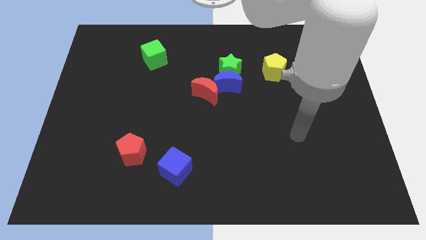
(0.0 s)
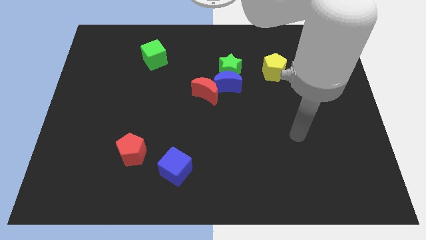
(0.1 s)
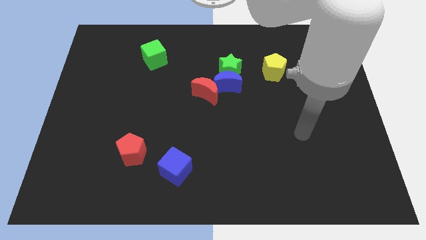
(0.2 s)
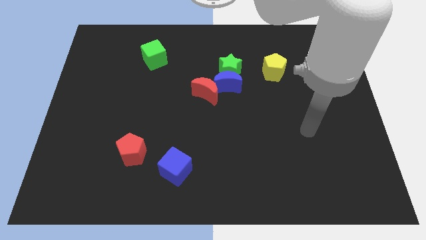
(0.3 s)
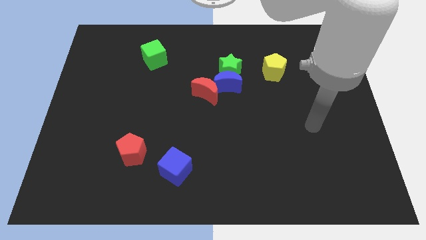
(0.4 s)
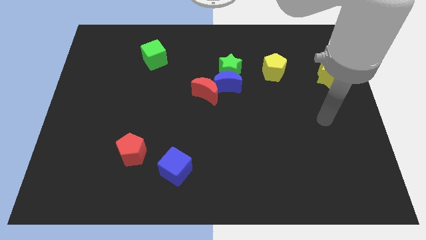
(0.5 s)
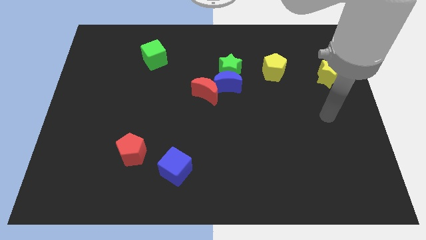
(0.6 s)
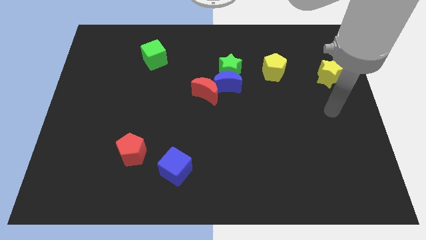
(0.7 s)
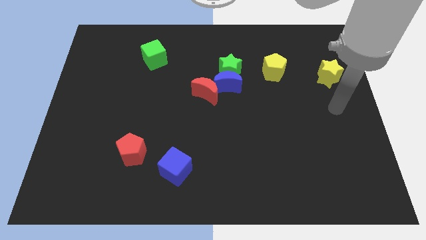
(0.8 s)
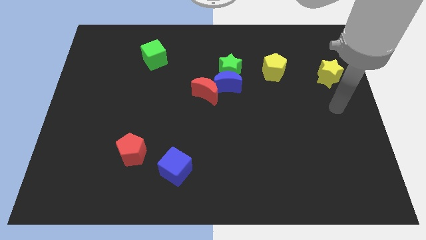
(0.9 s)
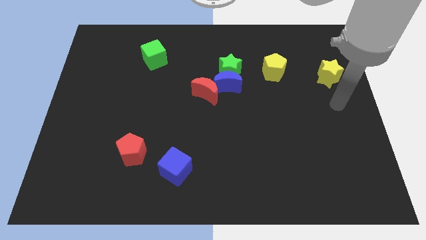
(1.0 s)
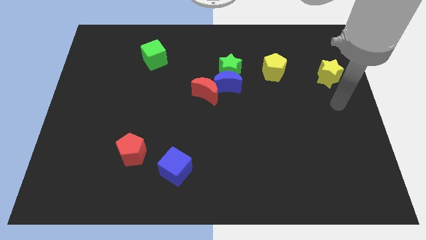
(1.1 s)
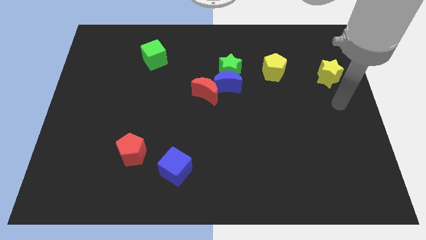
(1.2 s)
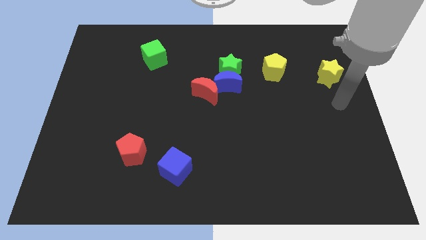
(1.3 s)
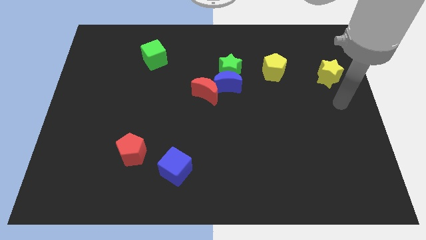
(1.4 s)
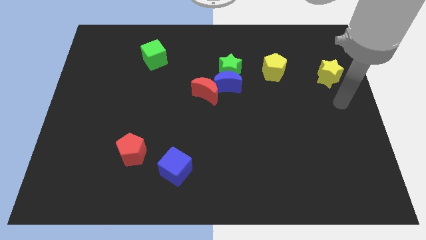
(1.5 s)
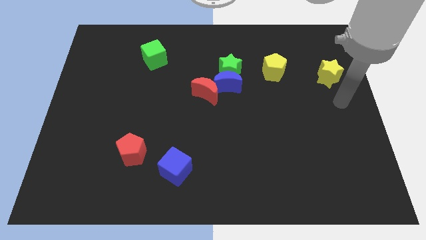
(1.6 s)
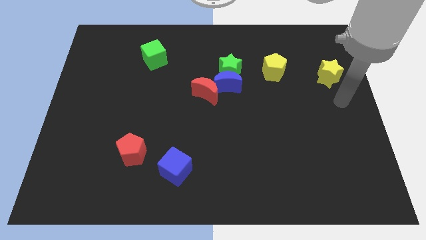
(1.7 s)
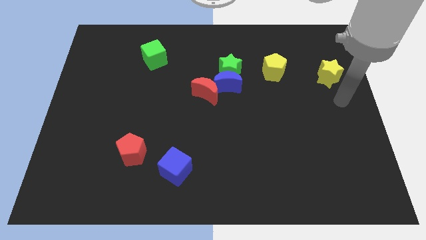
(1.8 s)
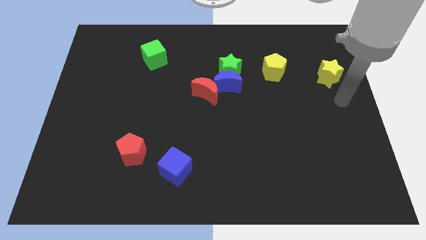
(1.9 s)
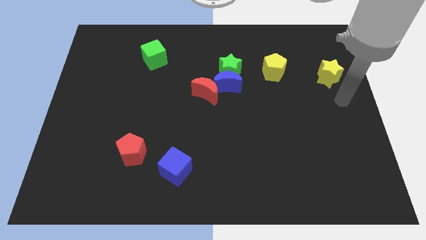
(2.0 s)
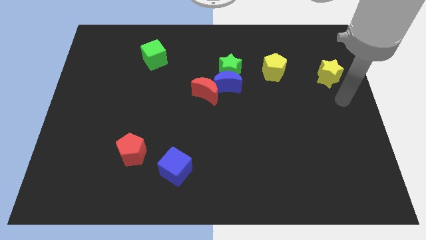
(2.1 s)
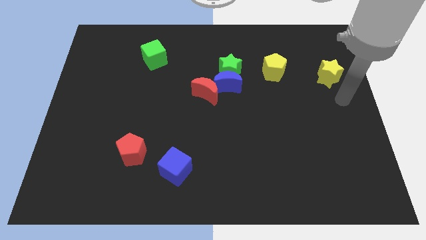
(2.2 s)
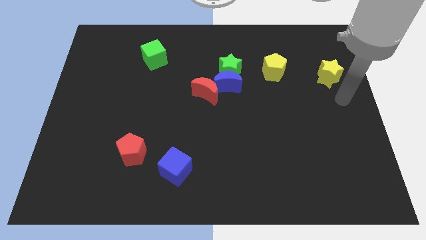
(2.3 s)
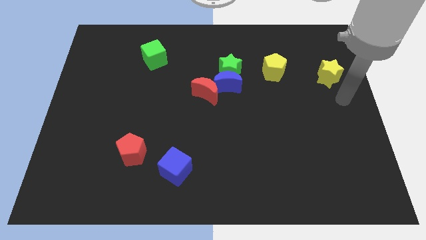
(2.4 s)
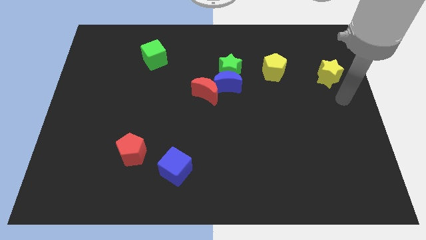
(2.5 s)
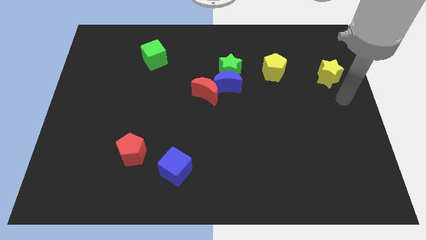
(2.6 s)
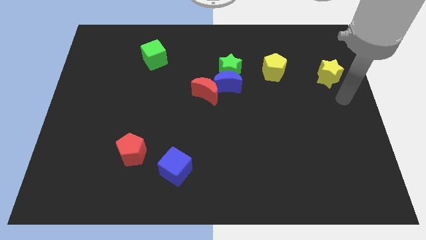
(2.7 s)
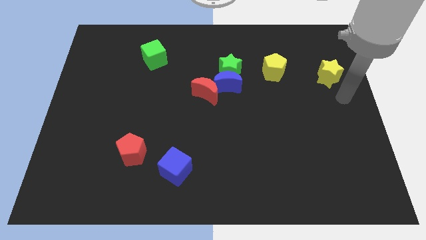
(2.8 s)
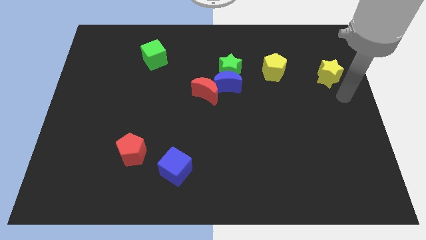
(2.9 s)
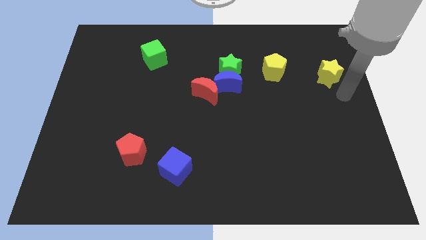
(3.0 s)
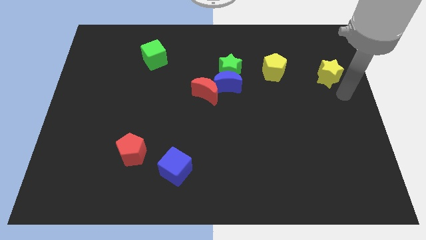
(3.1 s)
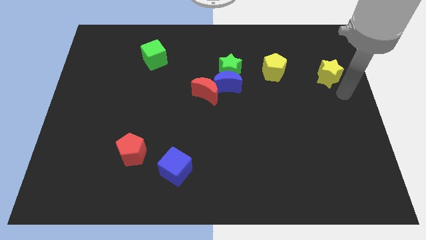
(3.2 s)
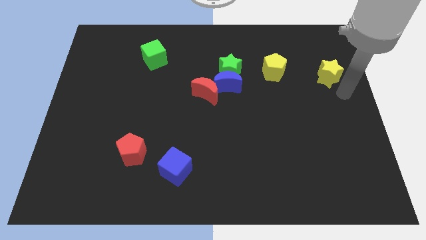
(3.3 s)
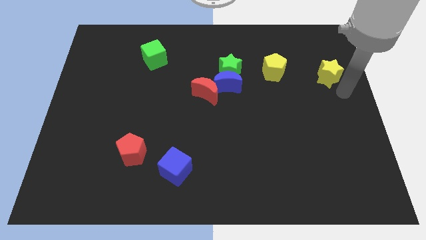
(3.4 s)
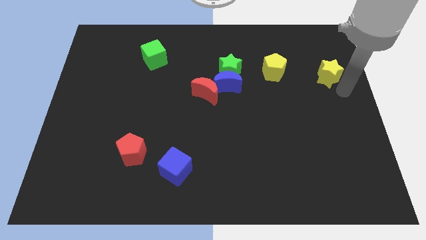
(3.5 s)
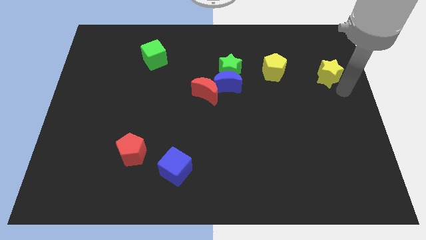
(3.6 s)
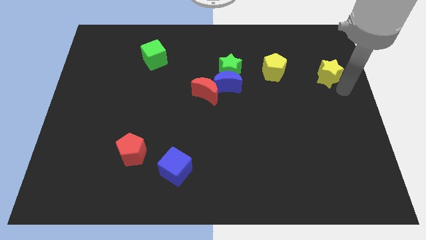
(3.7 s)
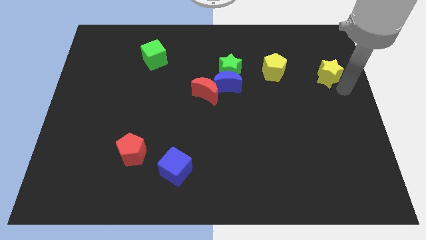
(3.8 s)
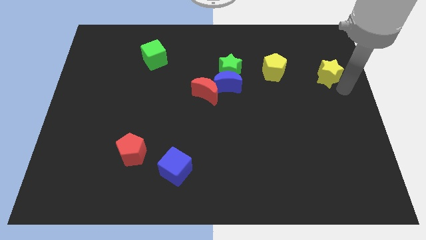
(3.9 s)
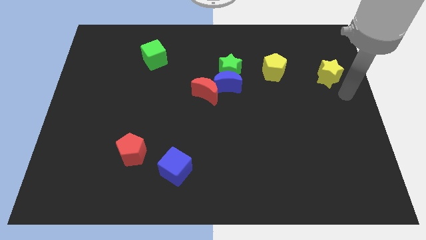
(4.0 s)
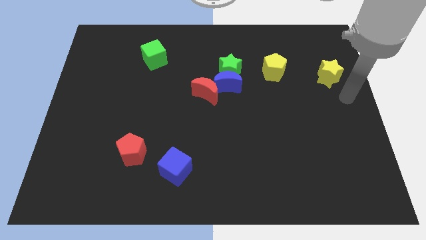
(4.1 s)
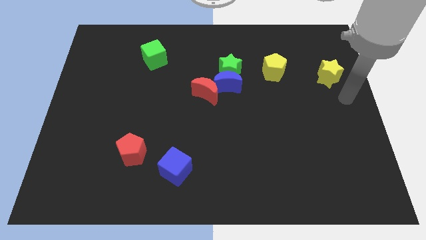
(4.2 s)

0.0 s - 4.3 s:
place the pointer at the bottom of the yellow star

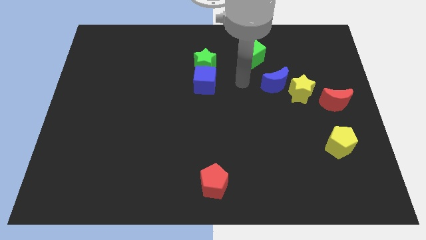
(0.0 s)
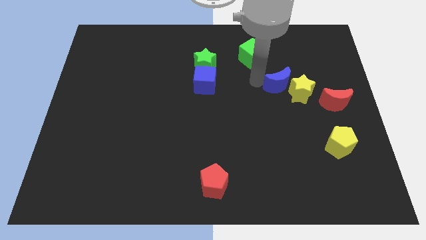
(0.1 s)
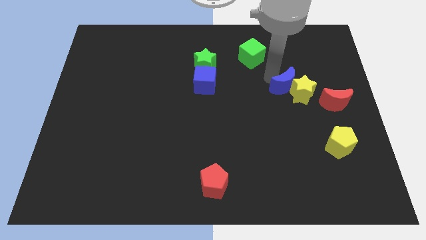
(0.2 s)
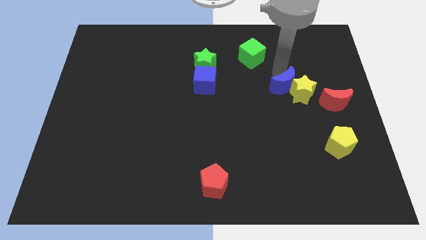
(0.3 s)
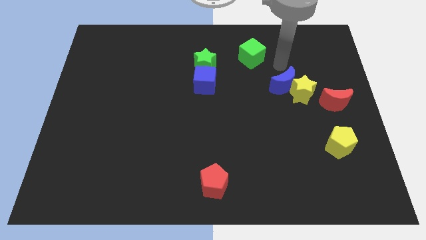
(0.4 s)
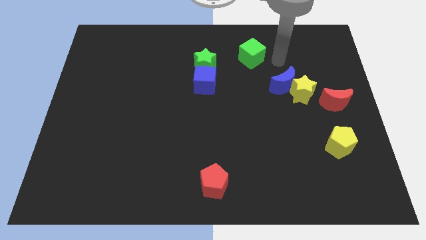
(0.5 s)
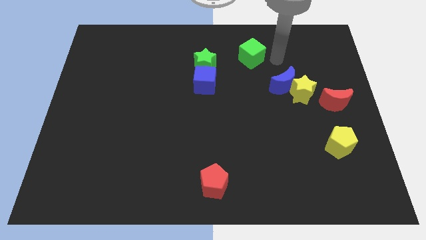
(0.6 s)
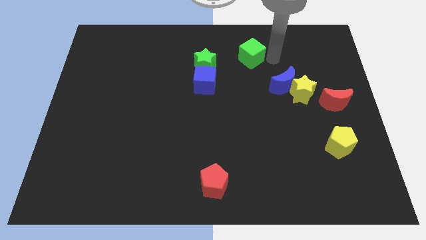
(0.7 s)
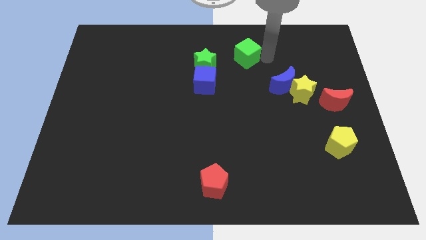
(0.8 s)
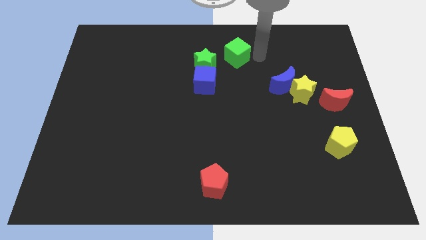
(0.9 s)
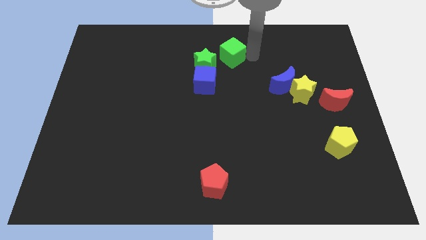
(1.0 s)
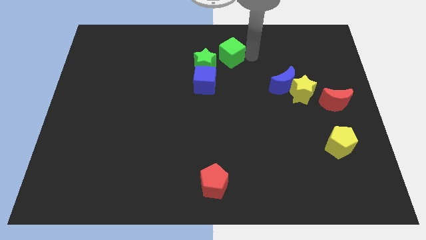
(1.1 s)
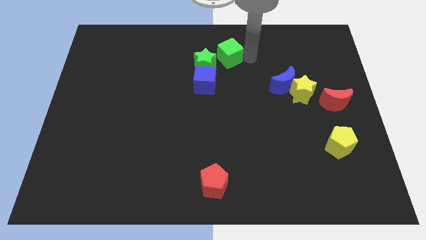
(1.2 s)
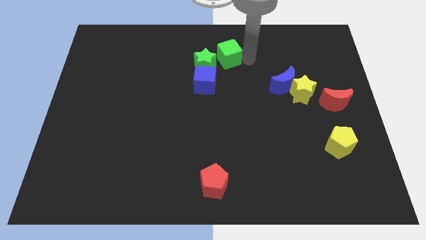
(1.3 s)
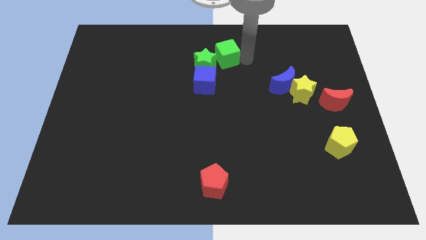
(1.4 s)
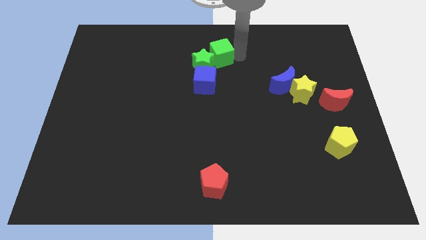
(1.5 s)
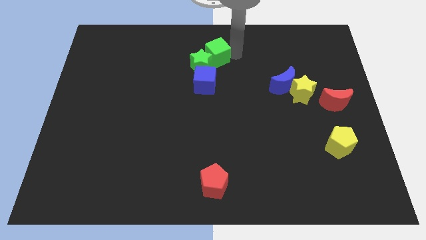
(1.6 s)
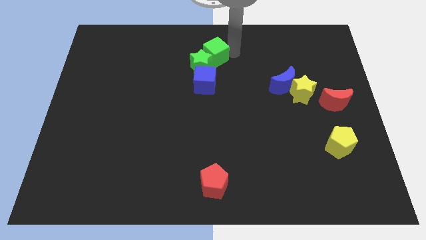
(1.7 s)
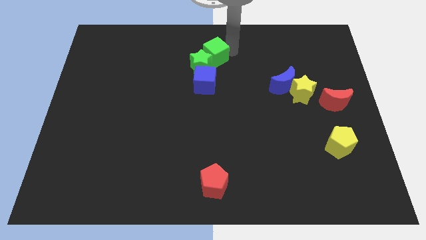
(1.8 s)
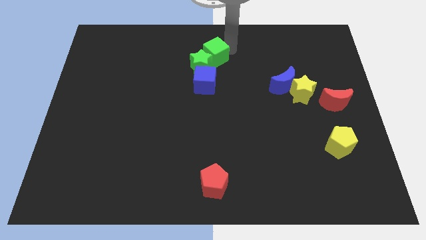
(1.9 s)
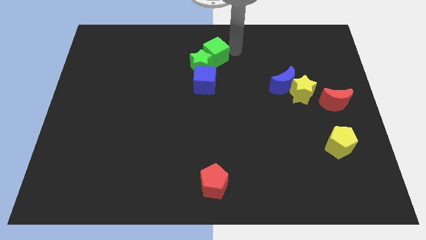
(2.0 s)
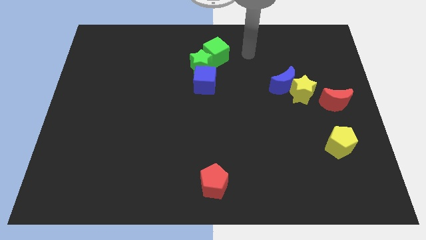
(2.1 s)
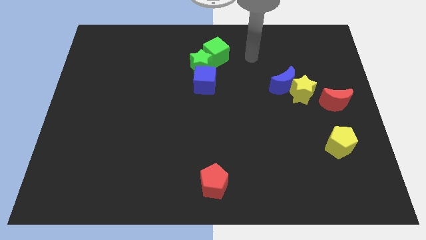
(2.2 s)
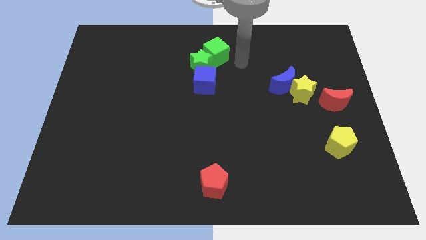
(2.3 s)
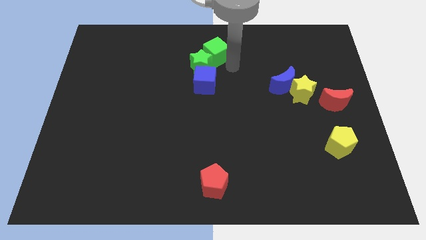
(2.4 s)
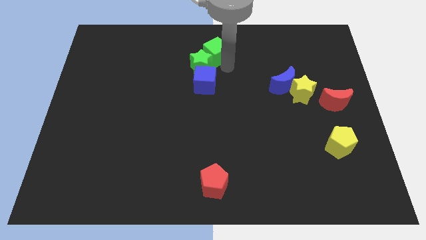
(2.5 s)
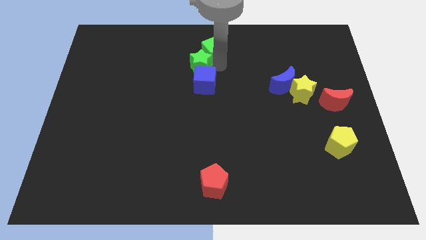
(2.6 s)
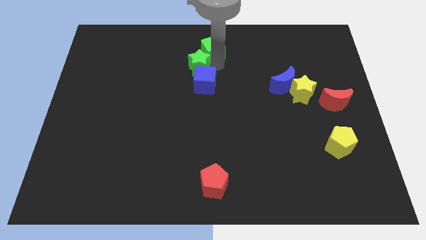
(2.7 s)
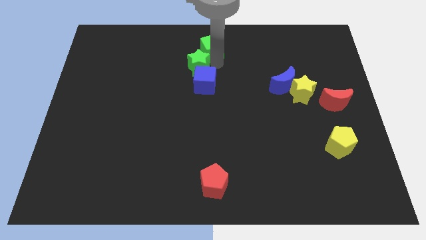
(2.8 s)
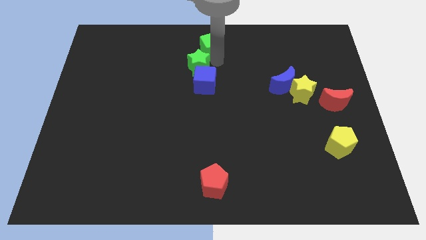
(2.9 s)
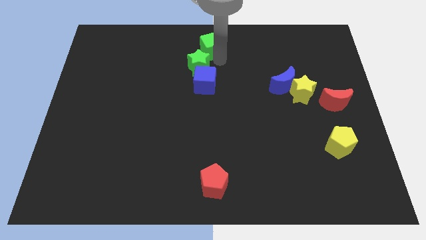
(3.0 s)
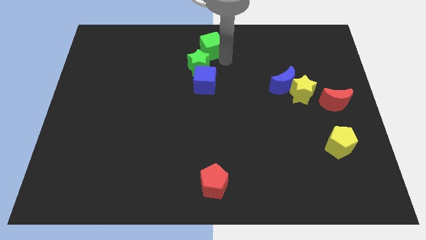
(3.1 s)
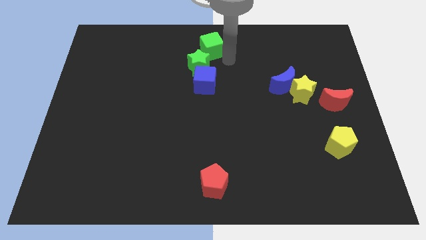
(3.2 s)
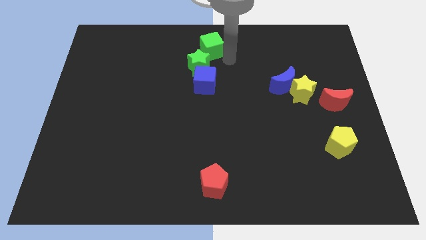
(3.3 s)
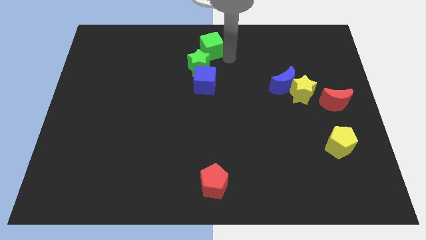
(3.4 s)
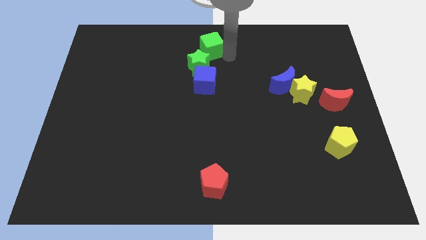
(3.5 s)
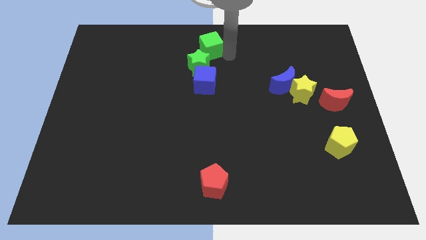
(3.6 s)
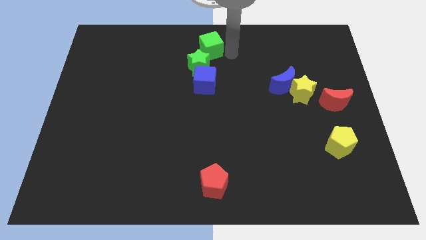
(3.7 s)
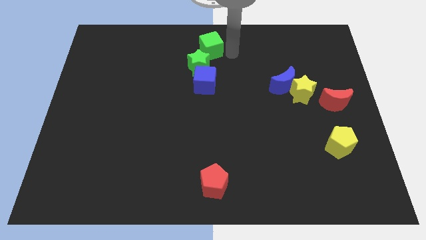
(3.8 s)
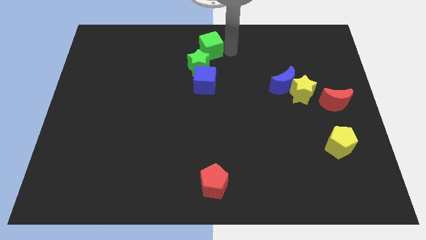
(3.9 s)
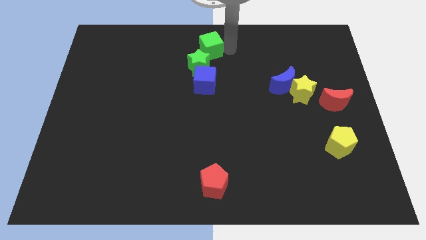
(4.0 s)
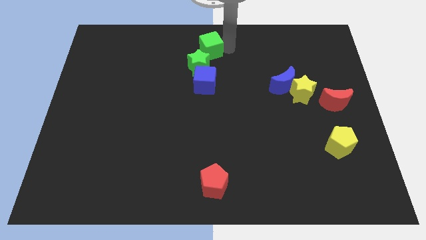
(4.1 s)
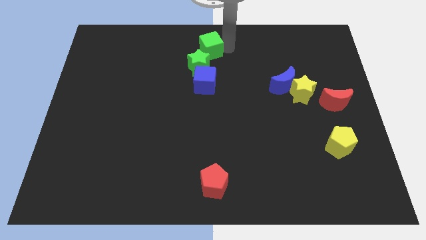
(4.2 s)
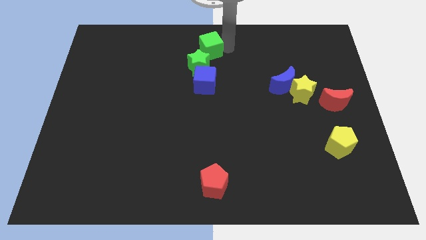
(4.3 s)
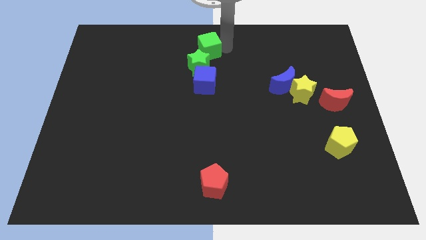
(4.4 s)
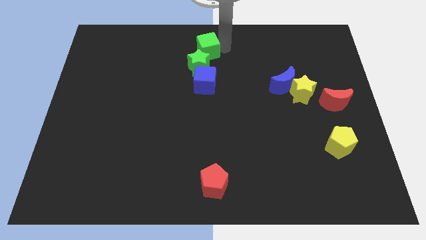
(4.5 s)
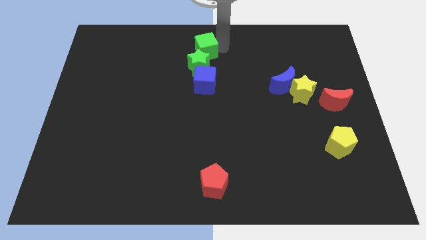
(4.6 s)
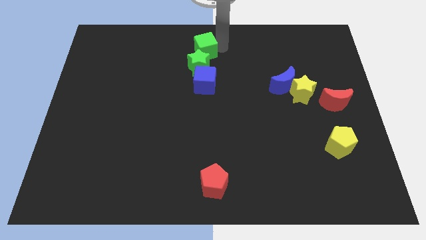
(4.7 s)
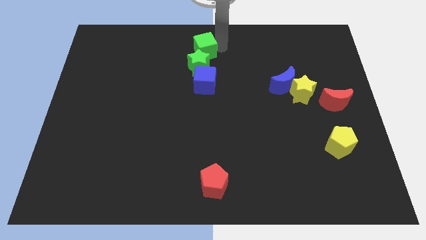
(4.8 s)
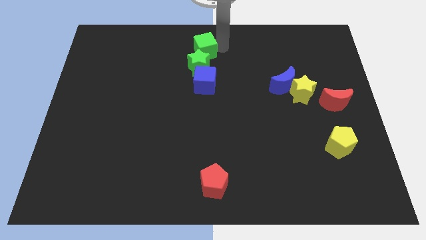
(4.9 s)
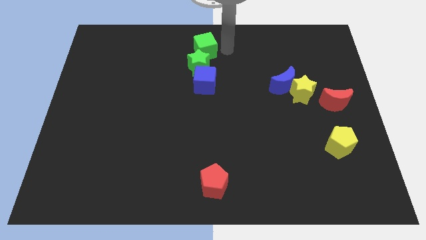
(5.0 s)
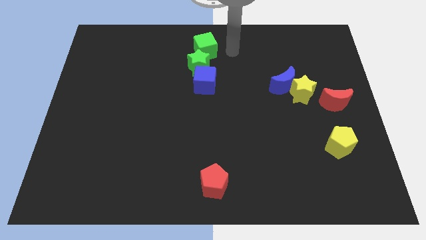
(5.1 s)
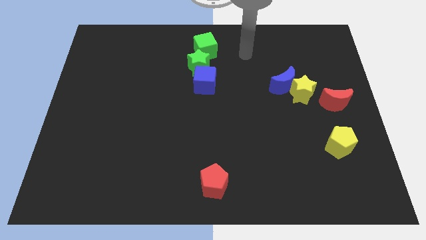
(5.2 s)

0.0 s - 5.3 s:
push the green cube into the green star
